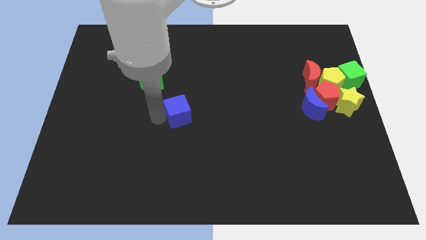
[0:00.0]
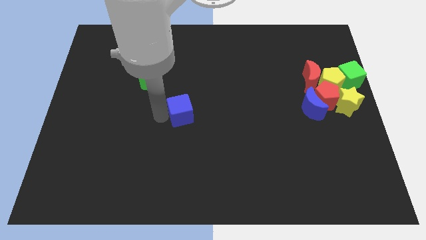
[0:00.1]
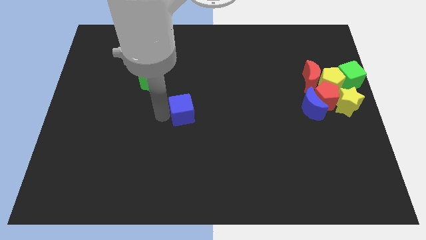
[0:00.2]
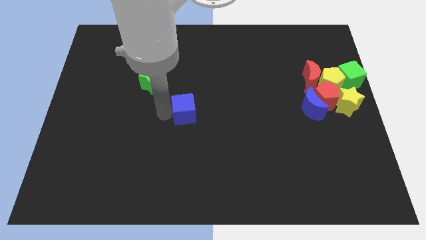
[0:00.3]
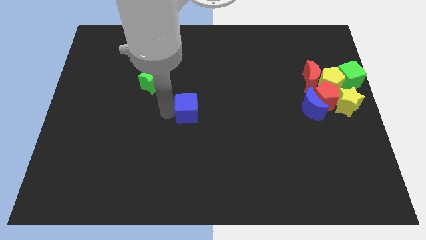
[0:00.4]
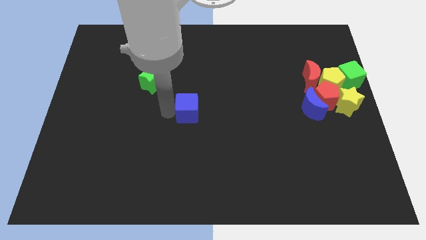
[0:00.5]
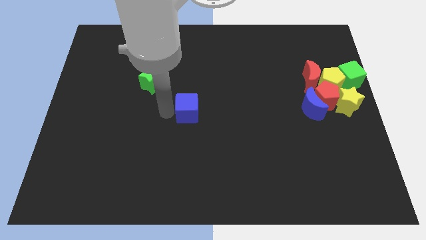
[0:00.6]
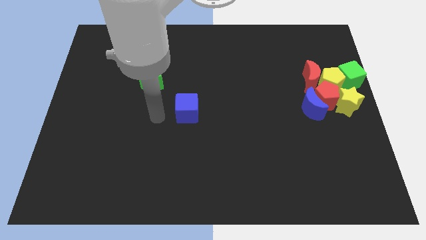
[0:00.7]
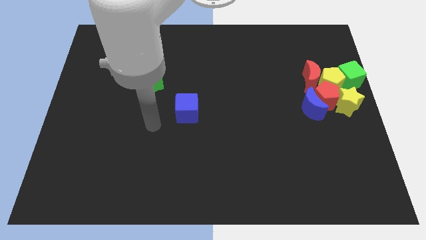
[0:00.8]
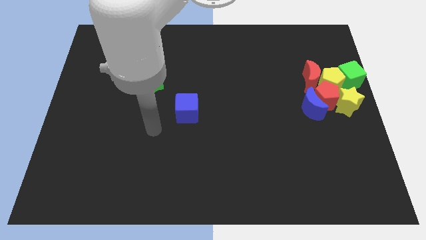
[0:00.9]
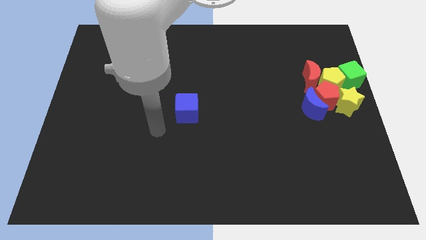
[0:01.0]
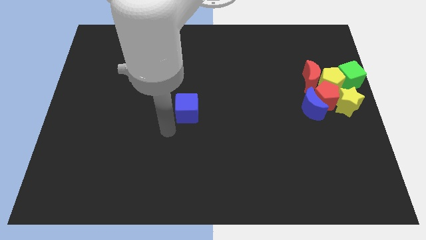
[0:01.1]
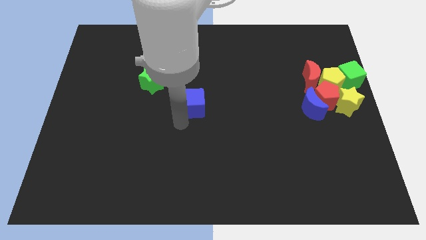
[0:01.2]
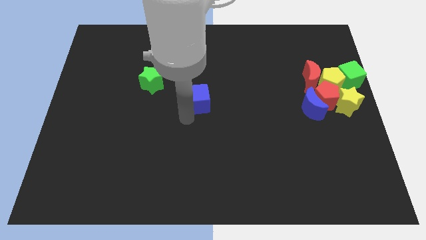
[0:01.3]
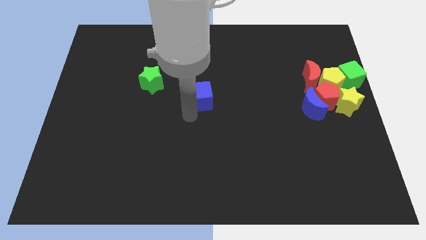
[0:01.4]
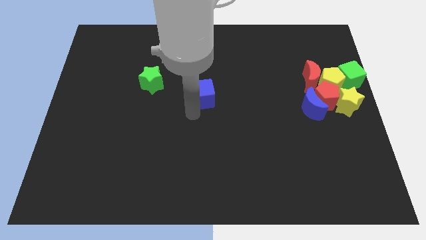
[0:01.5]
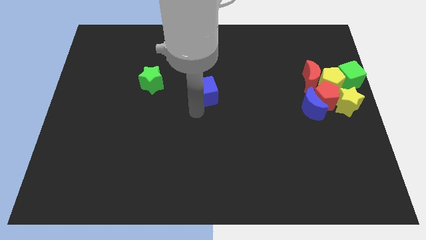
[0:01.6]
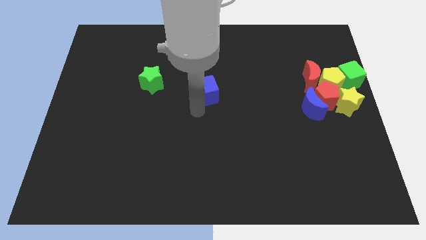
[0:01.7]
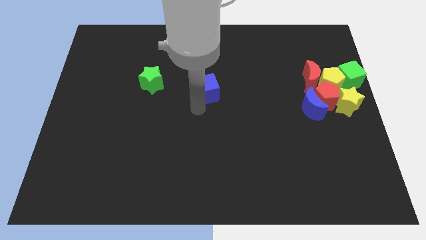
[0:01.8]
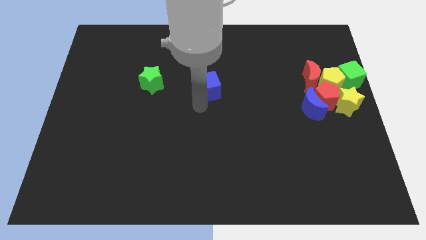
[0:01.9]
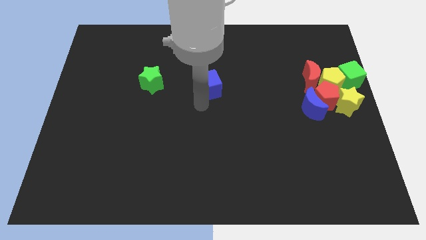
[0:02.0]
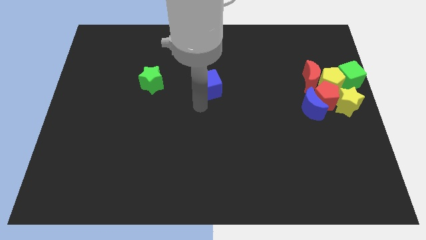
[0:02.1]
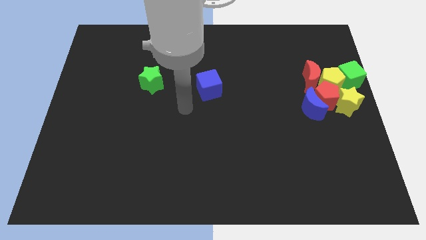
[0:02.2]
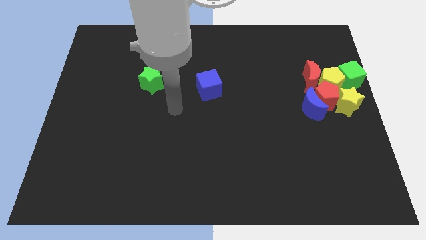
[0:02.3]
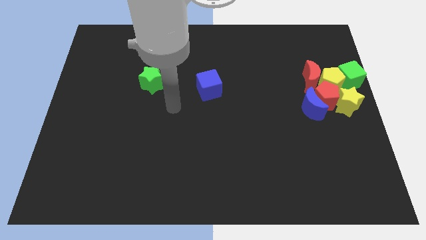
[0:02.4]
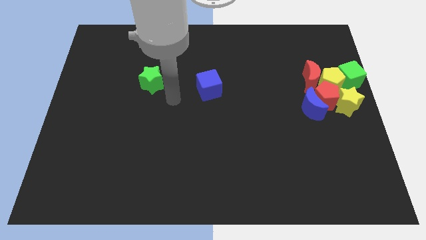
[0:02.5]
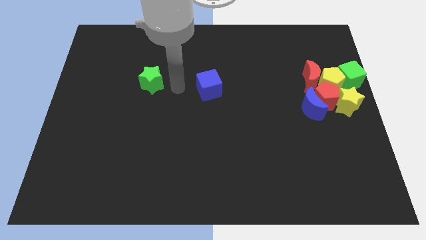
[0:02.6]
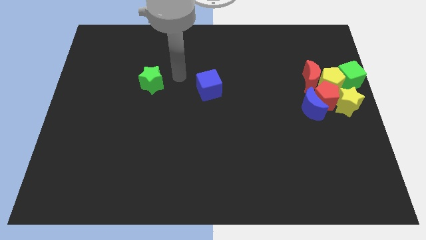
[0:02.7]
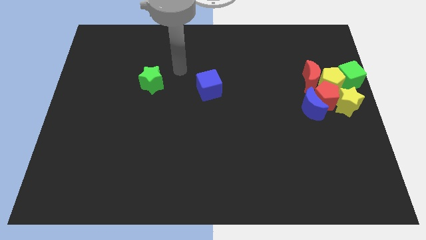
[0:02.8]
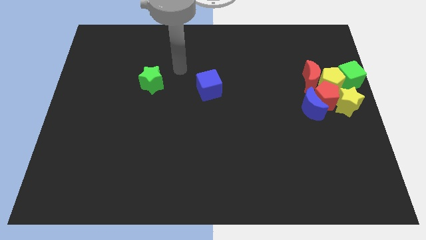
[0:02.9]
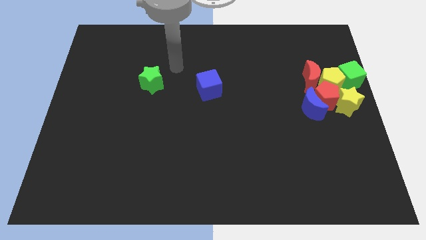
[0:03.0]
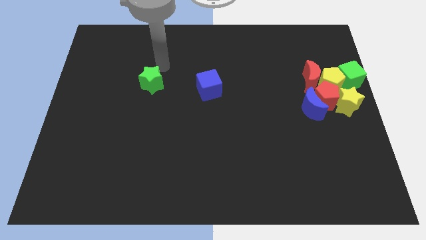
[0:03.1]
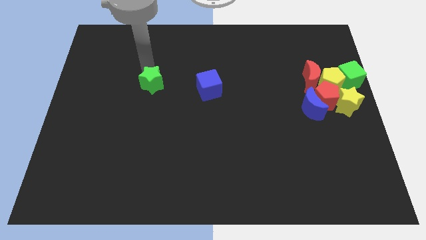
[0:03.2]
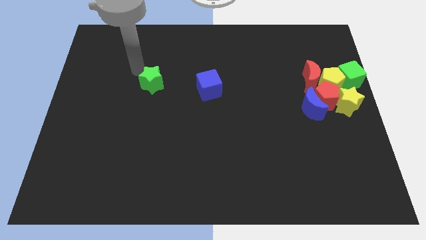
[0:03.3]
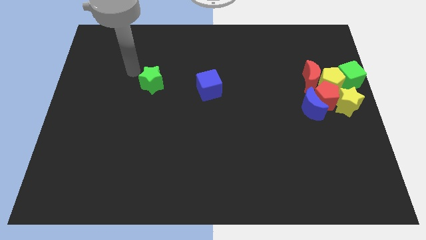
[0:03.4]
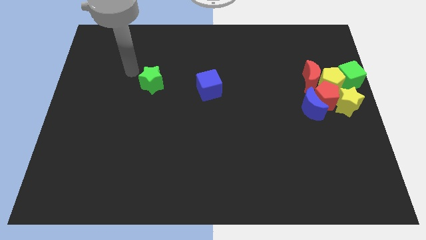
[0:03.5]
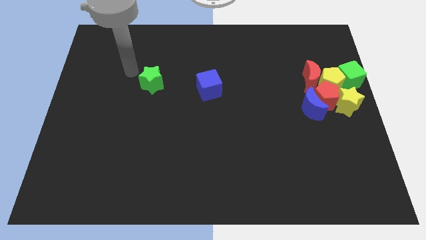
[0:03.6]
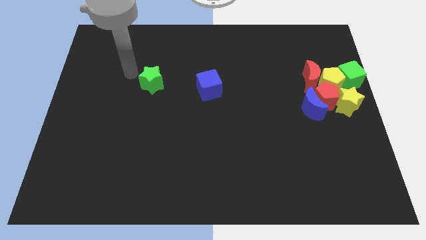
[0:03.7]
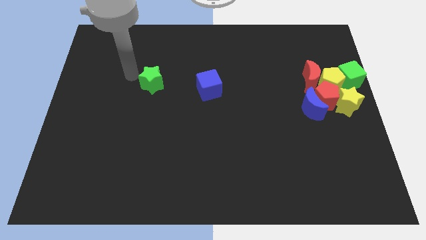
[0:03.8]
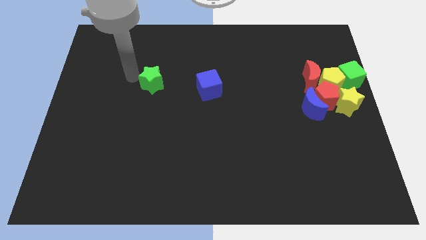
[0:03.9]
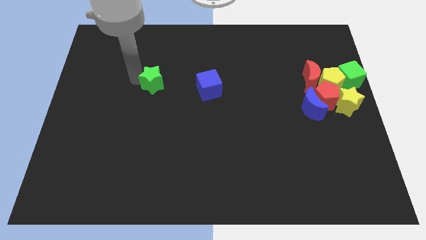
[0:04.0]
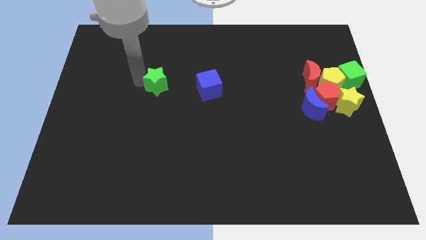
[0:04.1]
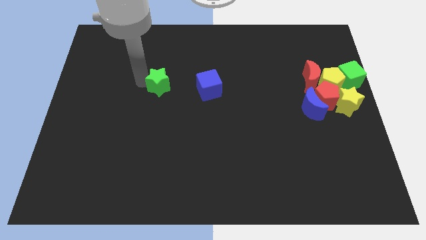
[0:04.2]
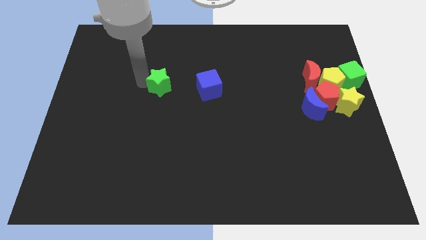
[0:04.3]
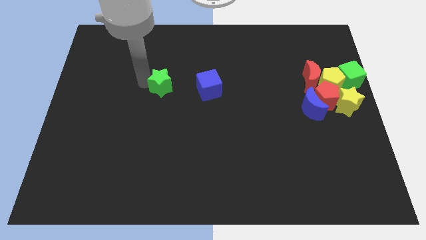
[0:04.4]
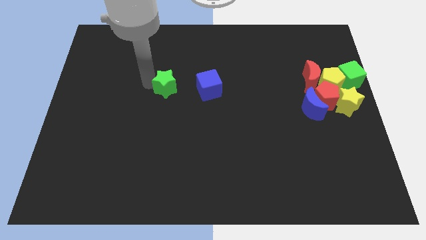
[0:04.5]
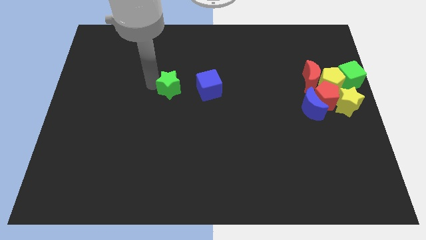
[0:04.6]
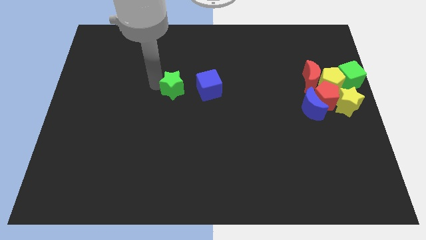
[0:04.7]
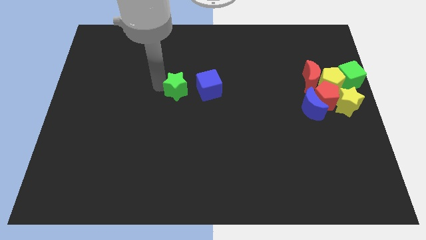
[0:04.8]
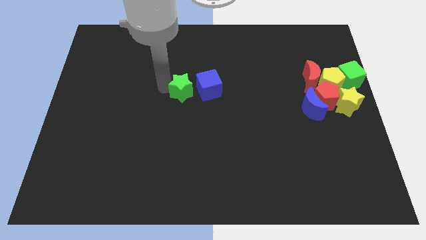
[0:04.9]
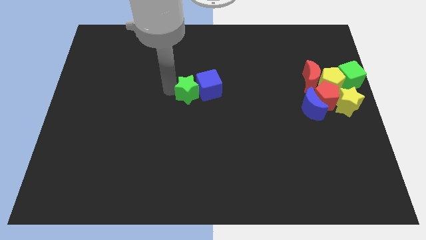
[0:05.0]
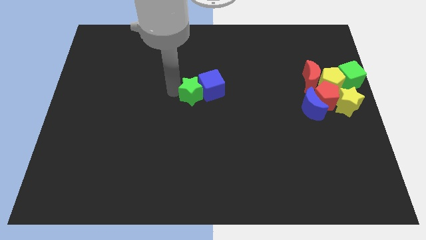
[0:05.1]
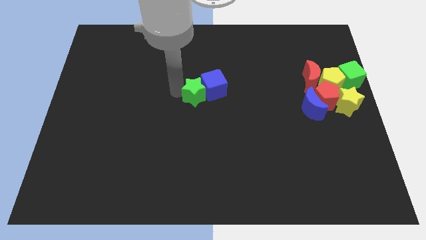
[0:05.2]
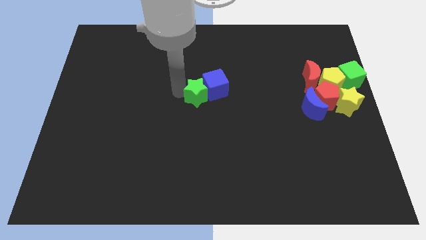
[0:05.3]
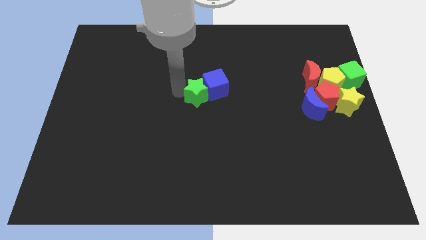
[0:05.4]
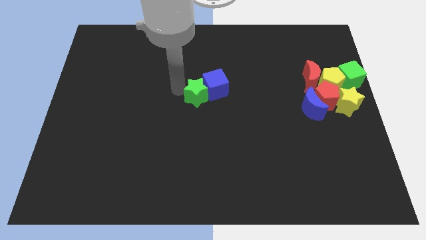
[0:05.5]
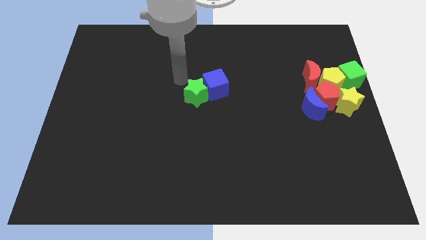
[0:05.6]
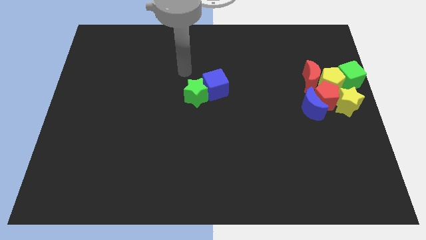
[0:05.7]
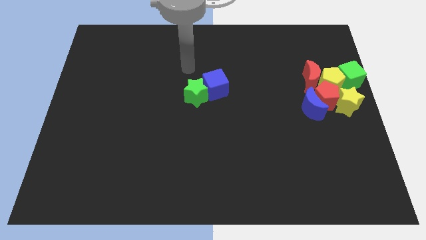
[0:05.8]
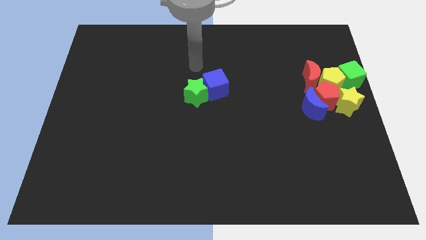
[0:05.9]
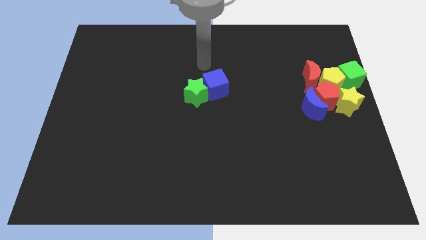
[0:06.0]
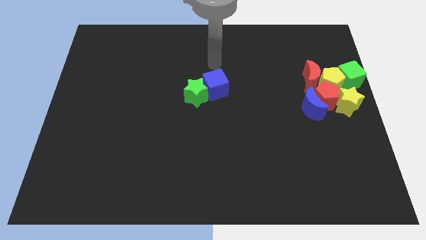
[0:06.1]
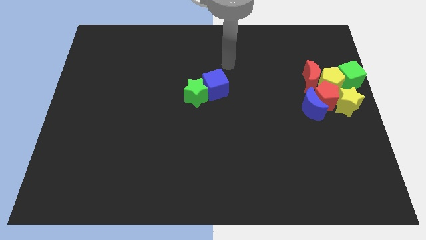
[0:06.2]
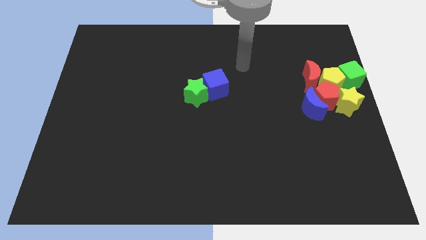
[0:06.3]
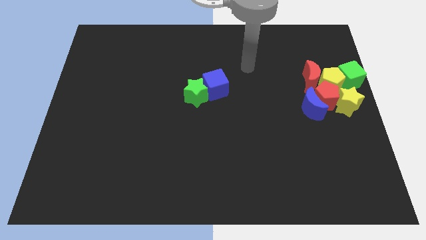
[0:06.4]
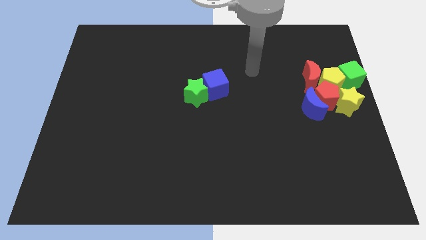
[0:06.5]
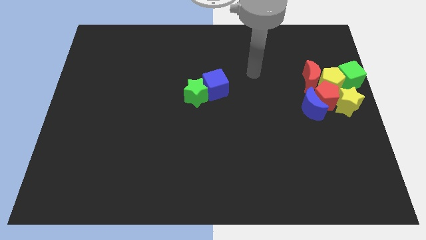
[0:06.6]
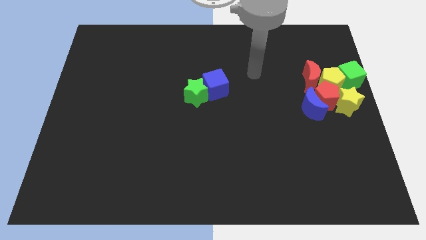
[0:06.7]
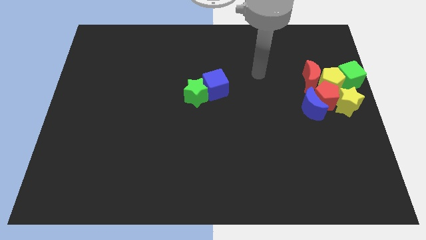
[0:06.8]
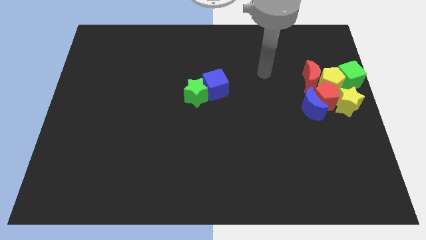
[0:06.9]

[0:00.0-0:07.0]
move green star into blue cube

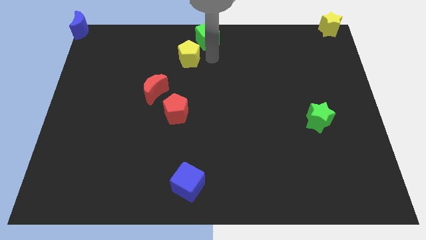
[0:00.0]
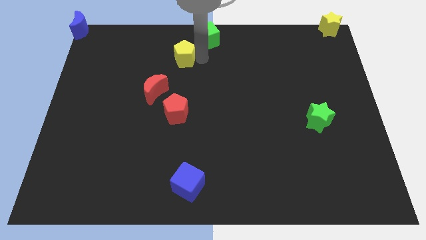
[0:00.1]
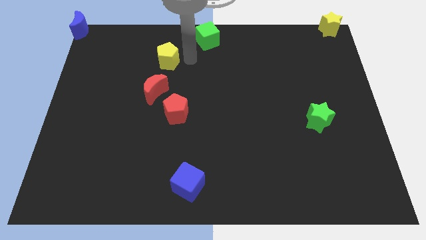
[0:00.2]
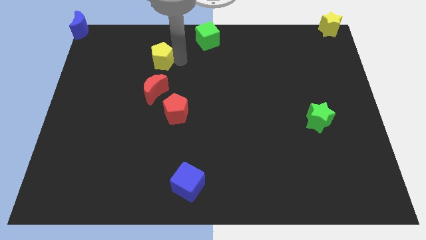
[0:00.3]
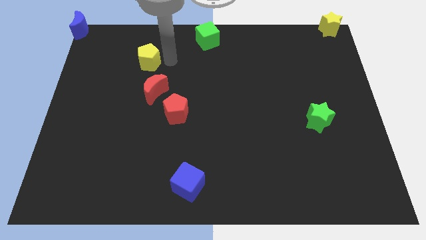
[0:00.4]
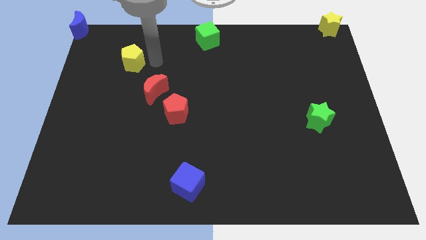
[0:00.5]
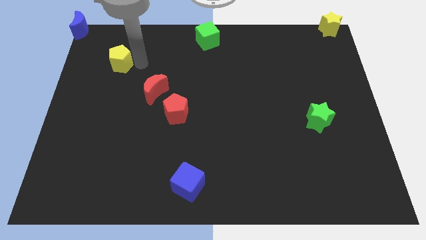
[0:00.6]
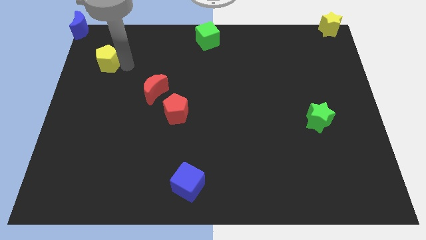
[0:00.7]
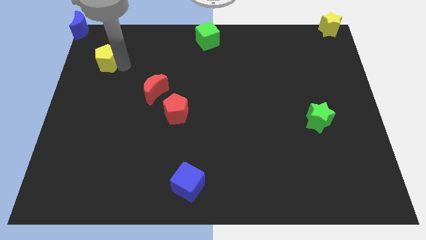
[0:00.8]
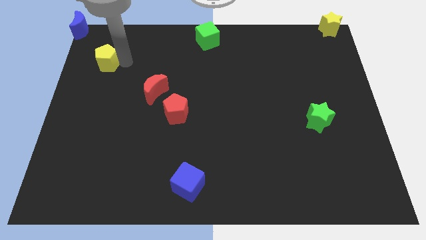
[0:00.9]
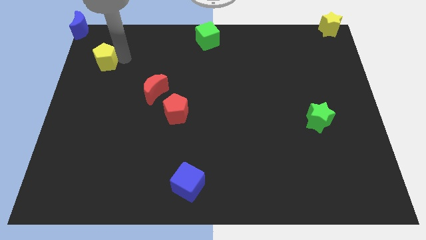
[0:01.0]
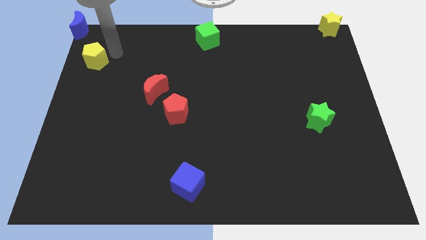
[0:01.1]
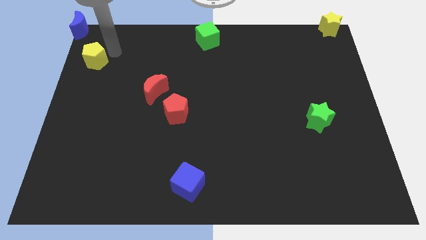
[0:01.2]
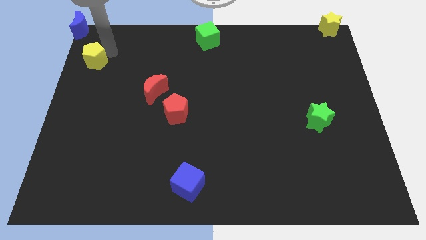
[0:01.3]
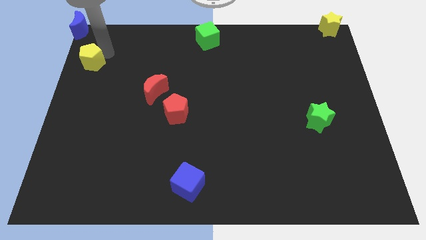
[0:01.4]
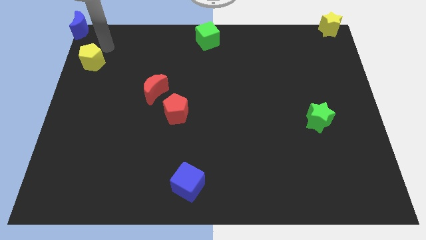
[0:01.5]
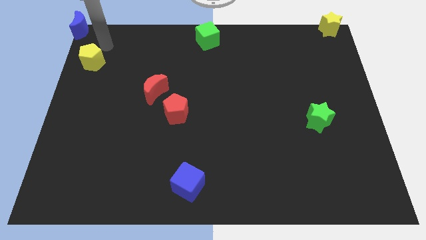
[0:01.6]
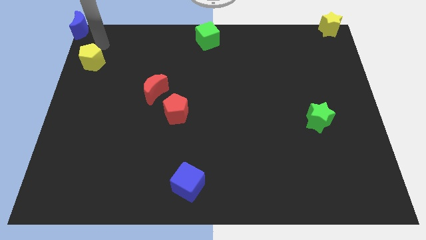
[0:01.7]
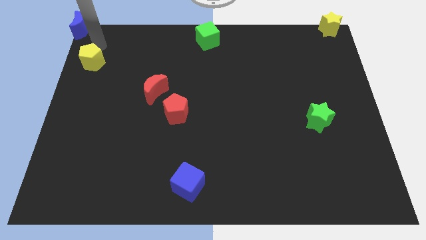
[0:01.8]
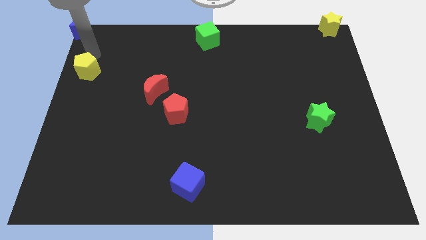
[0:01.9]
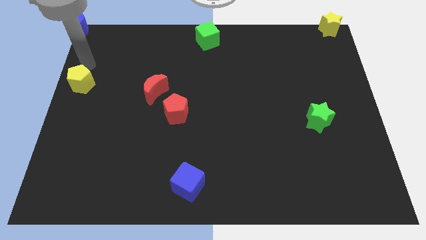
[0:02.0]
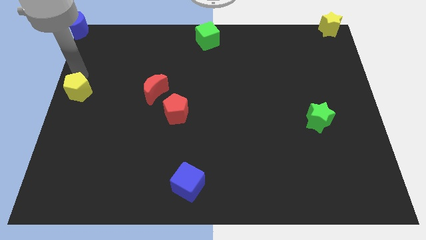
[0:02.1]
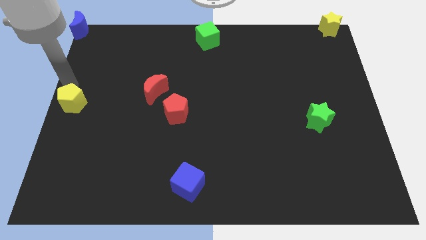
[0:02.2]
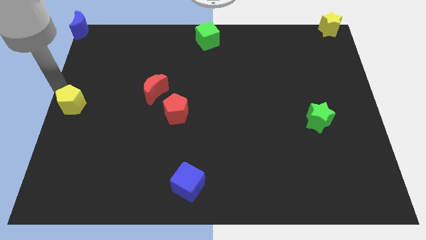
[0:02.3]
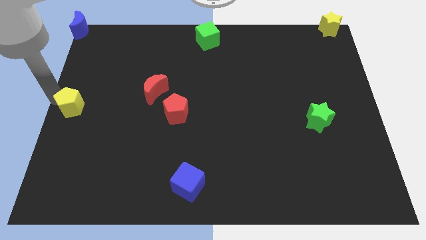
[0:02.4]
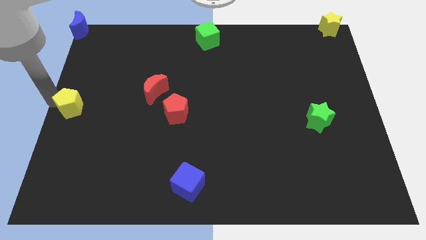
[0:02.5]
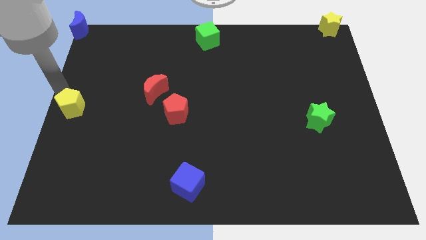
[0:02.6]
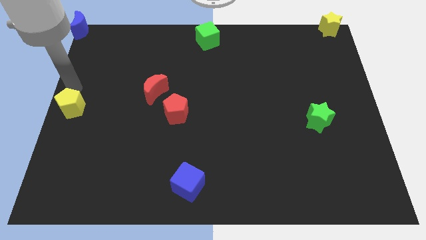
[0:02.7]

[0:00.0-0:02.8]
separate yellow pentagon from green cube
